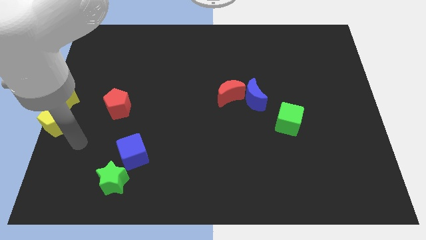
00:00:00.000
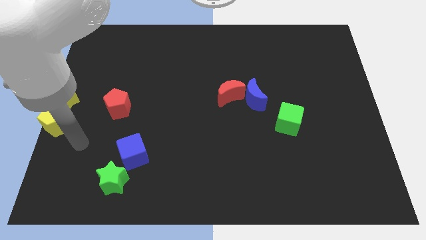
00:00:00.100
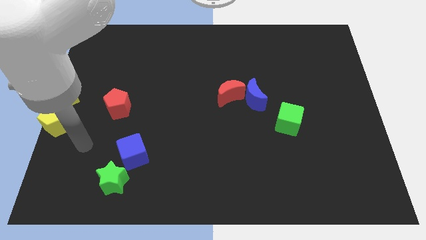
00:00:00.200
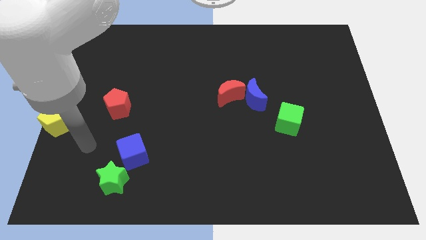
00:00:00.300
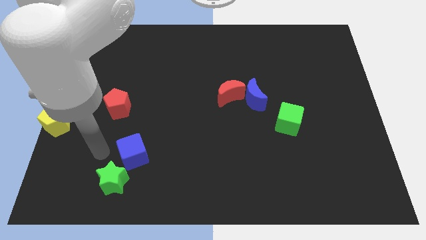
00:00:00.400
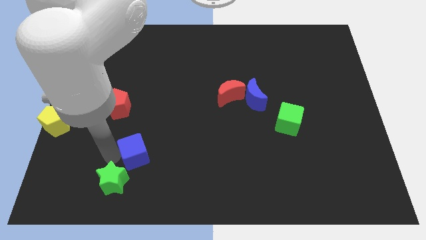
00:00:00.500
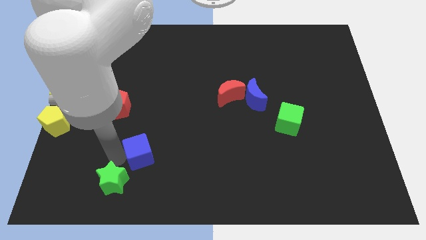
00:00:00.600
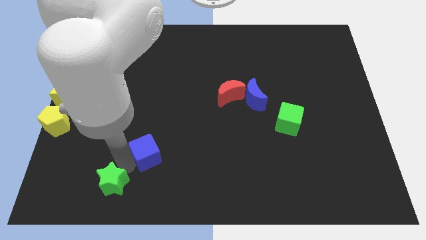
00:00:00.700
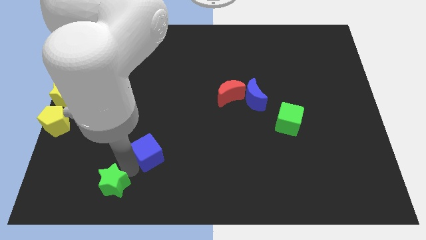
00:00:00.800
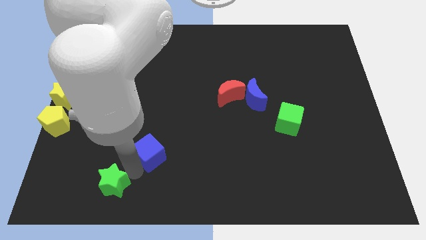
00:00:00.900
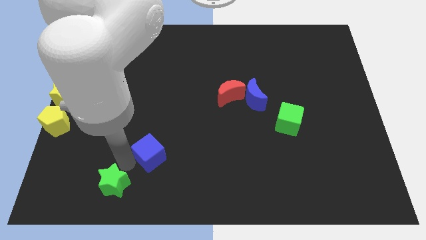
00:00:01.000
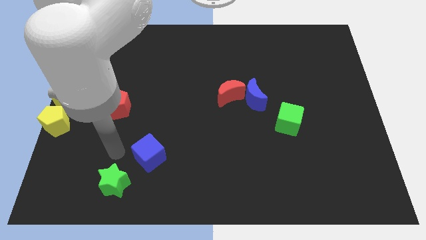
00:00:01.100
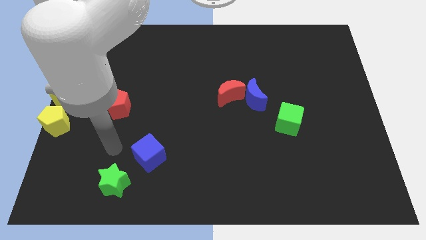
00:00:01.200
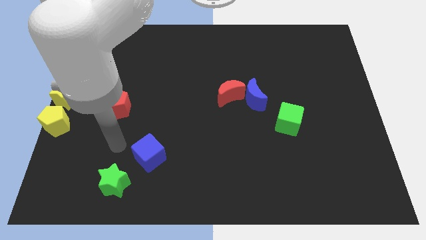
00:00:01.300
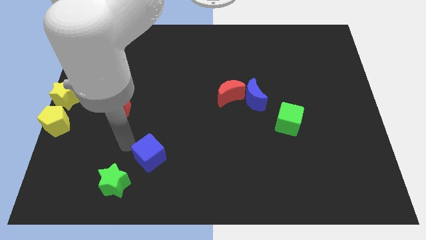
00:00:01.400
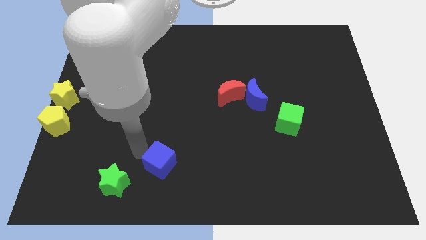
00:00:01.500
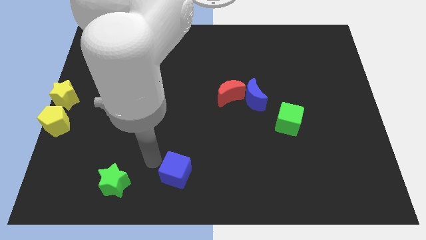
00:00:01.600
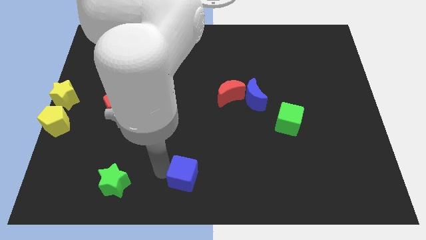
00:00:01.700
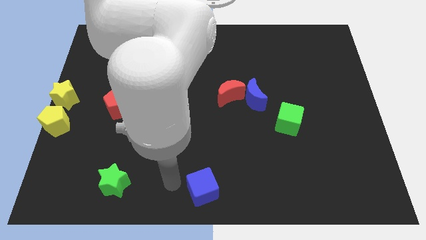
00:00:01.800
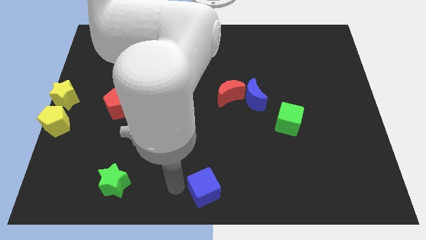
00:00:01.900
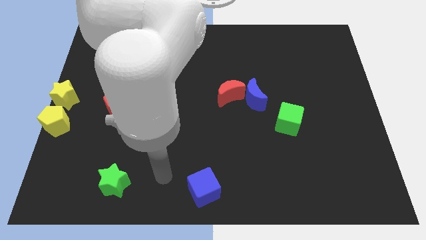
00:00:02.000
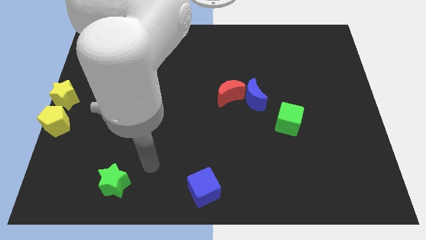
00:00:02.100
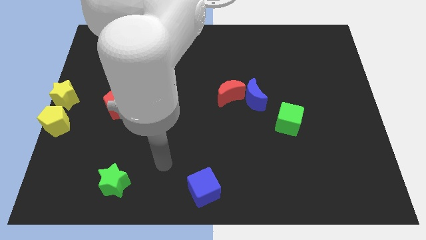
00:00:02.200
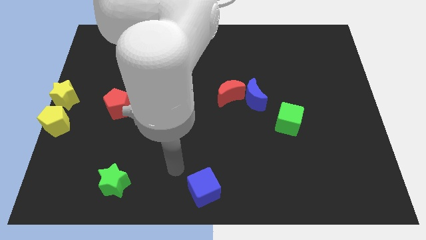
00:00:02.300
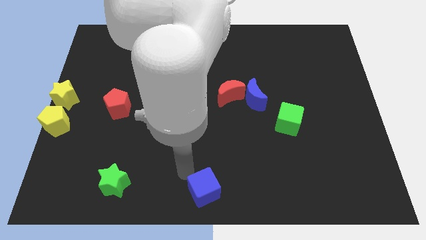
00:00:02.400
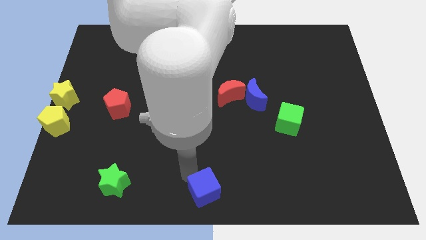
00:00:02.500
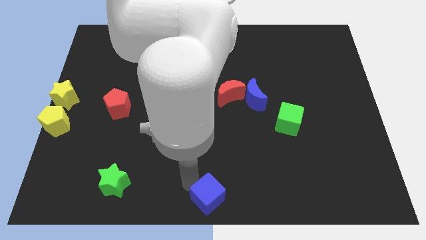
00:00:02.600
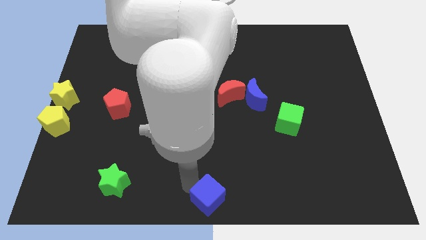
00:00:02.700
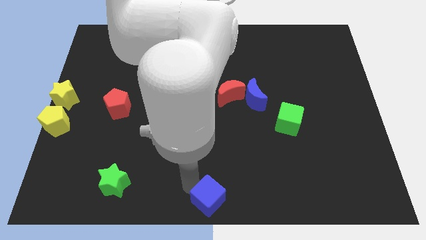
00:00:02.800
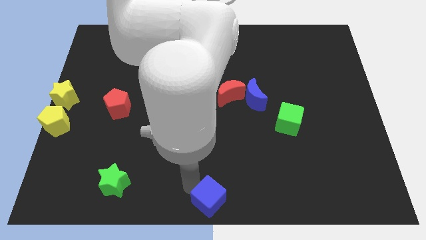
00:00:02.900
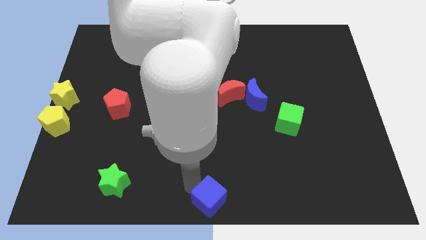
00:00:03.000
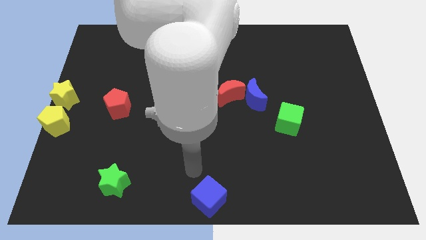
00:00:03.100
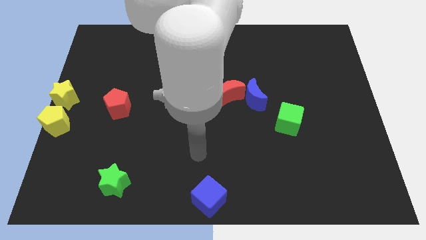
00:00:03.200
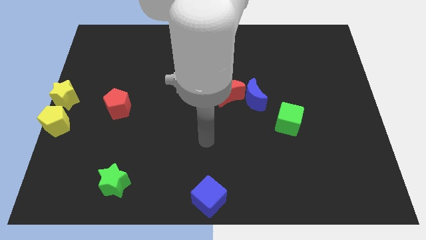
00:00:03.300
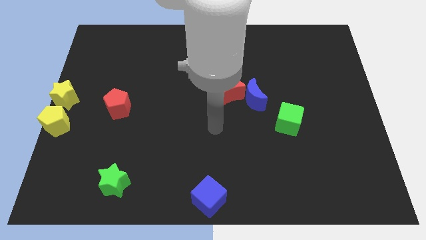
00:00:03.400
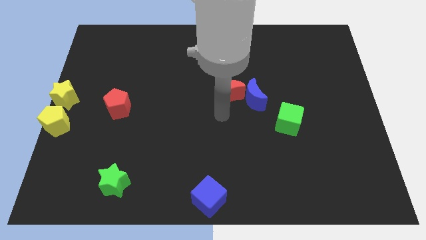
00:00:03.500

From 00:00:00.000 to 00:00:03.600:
separate blue cube and green star

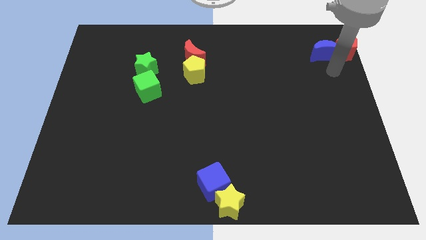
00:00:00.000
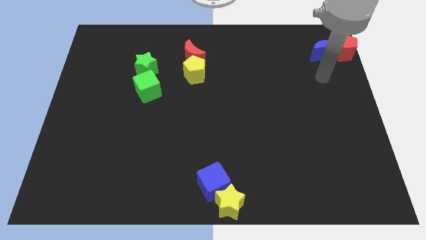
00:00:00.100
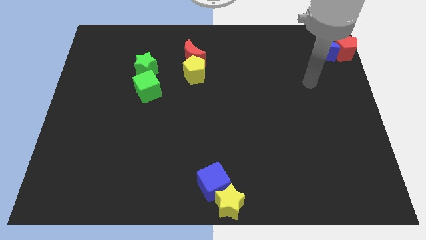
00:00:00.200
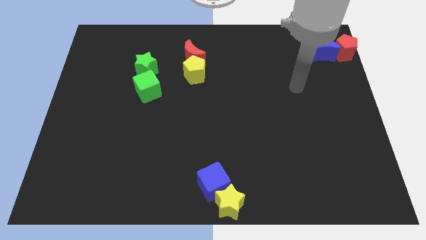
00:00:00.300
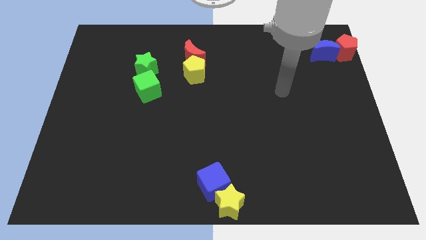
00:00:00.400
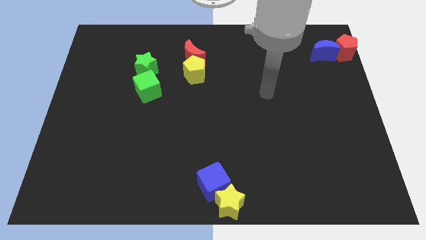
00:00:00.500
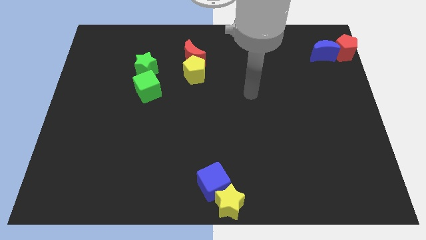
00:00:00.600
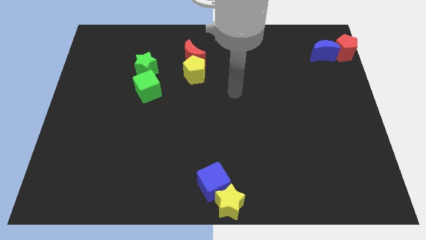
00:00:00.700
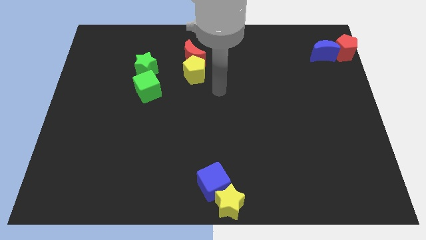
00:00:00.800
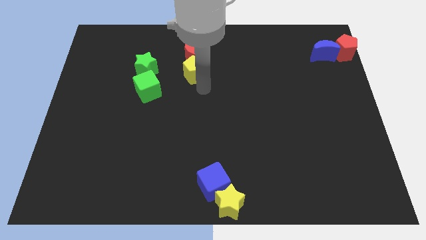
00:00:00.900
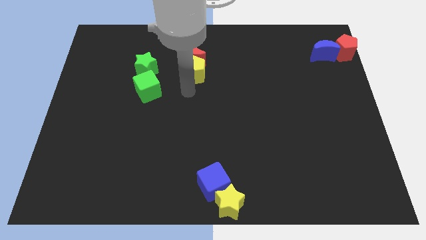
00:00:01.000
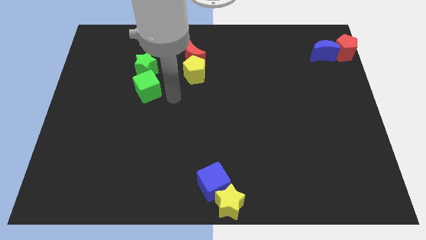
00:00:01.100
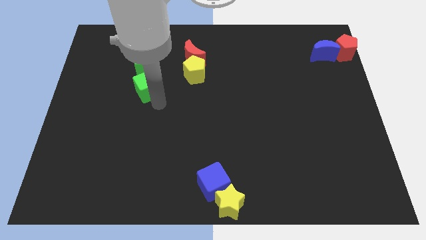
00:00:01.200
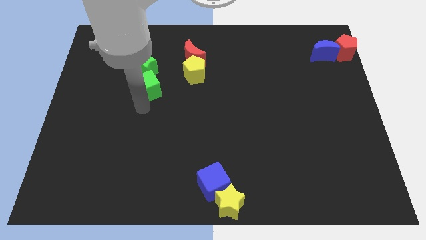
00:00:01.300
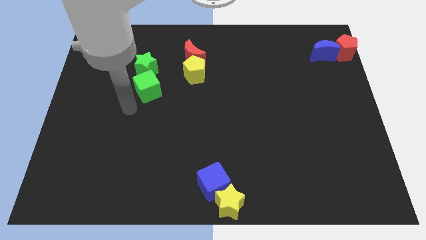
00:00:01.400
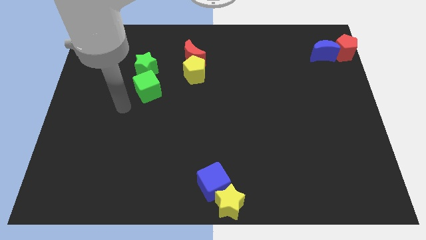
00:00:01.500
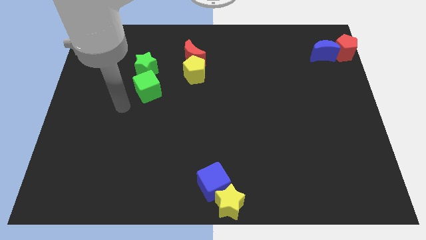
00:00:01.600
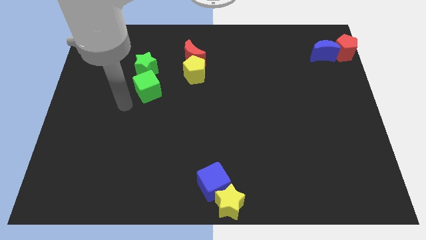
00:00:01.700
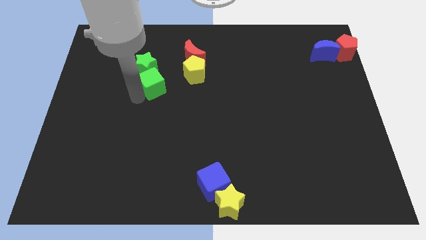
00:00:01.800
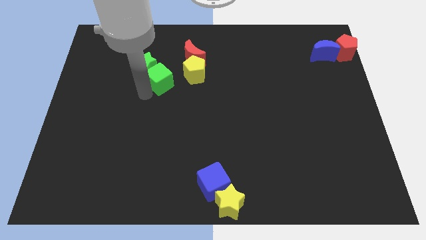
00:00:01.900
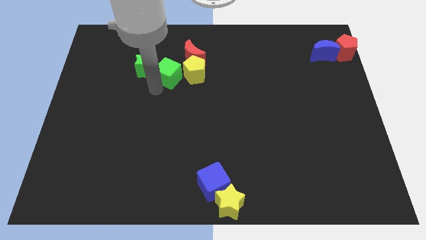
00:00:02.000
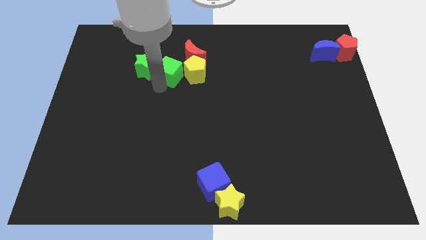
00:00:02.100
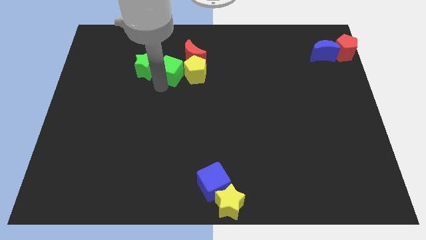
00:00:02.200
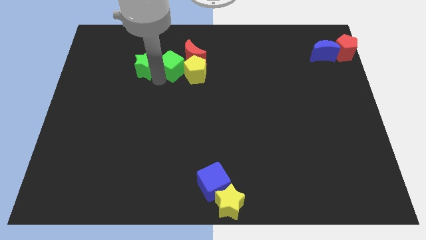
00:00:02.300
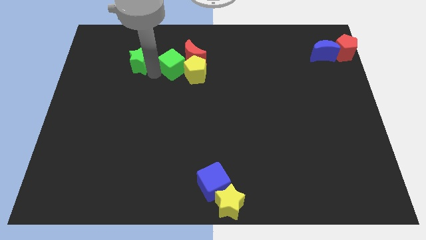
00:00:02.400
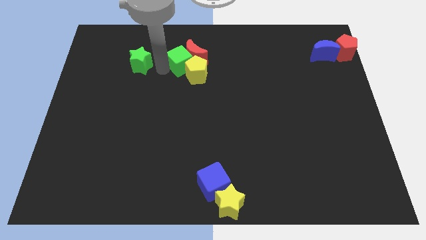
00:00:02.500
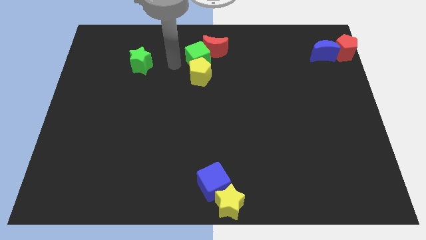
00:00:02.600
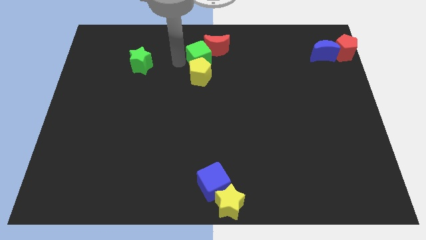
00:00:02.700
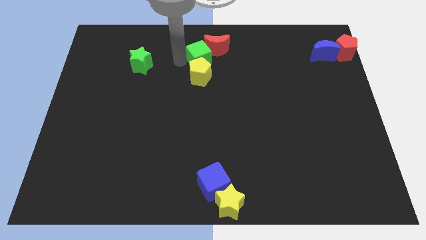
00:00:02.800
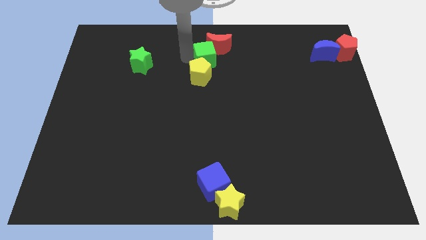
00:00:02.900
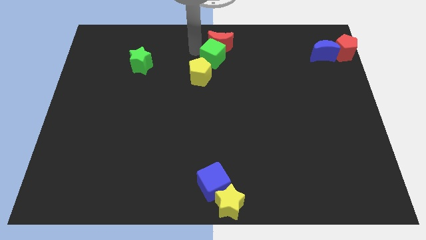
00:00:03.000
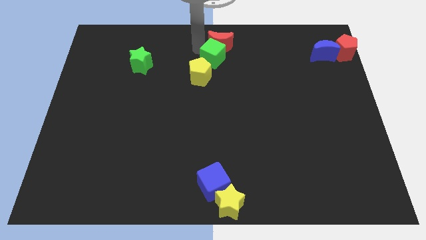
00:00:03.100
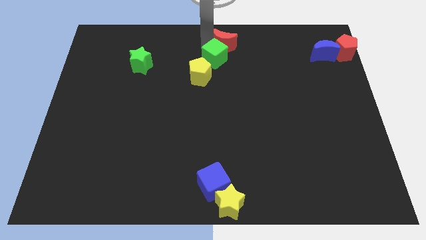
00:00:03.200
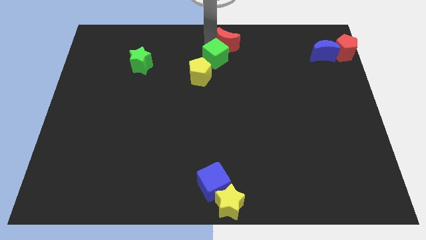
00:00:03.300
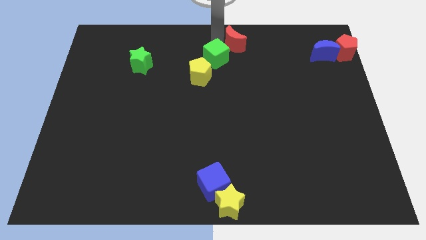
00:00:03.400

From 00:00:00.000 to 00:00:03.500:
separate green cube from the green star

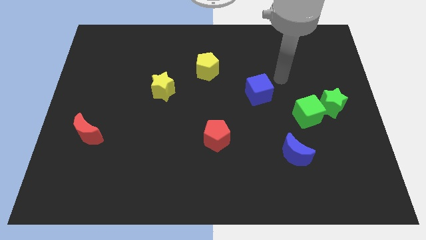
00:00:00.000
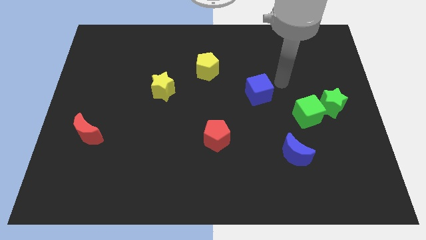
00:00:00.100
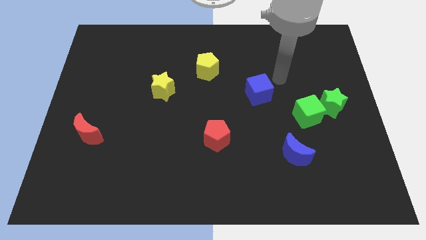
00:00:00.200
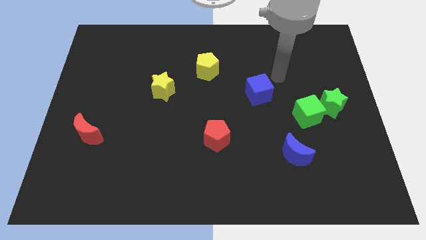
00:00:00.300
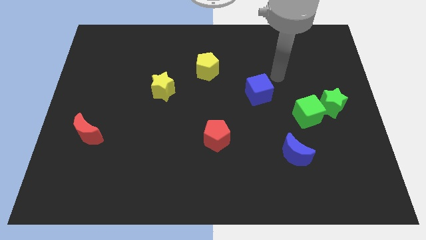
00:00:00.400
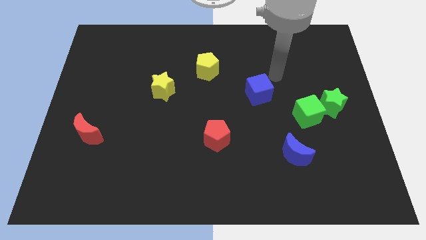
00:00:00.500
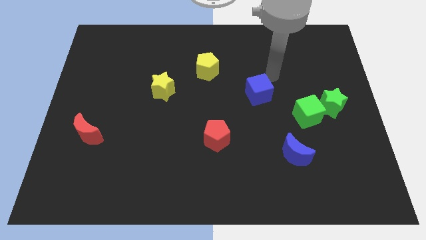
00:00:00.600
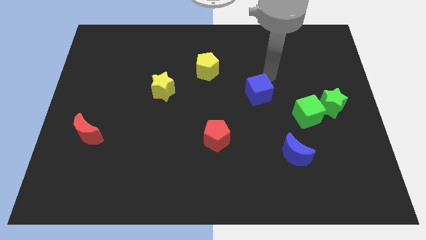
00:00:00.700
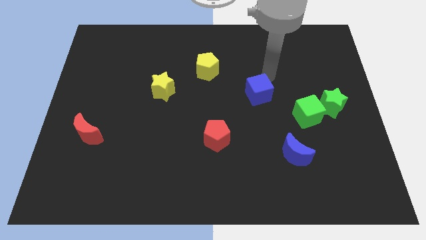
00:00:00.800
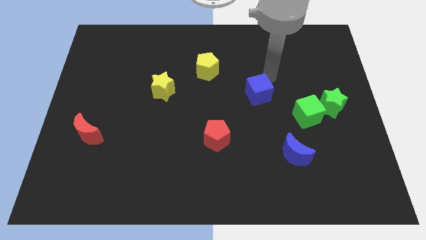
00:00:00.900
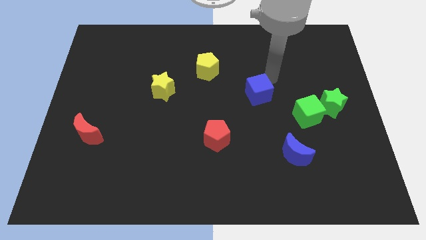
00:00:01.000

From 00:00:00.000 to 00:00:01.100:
place arm above blue cube

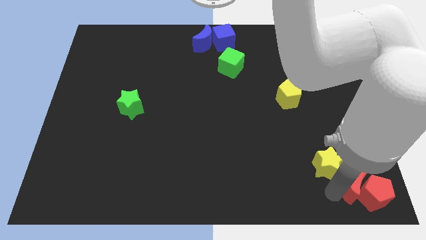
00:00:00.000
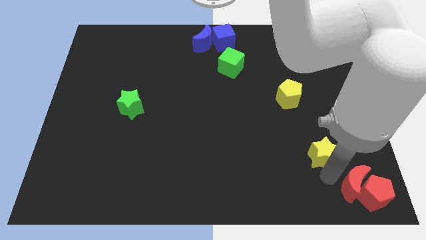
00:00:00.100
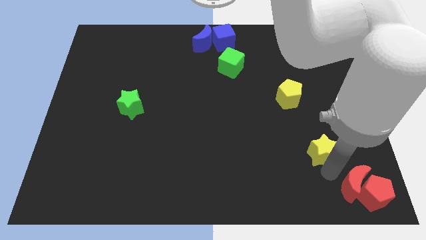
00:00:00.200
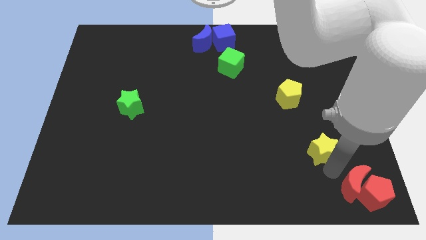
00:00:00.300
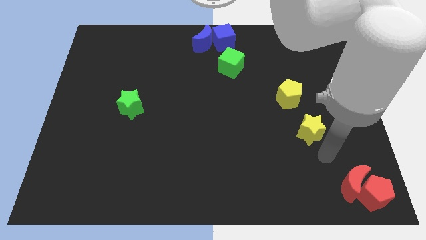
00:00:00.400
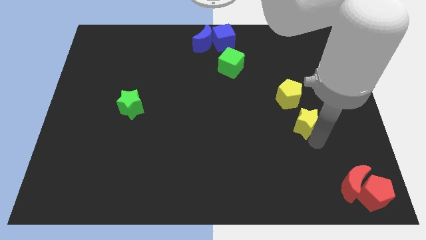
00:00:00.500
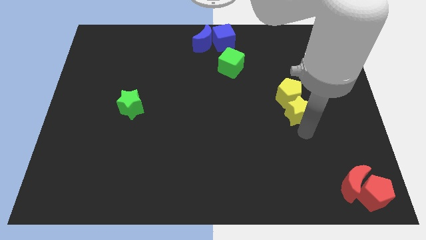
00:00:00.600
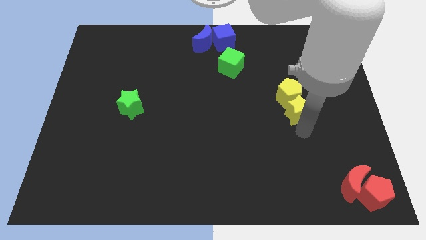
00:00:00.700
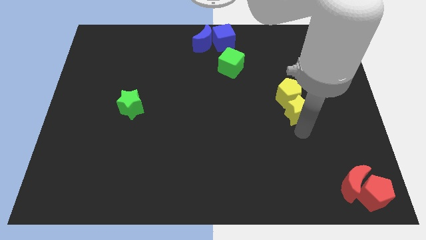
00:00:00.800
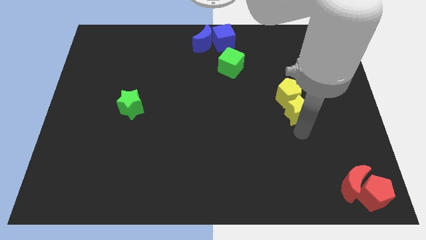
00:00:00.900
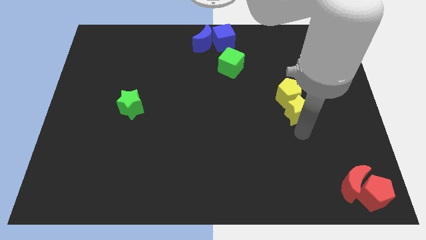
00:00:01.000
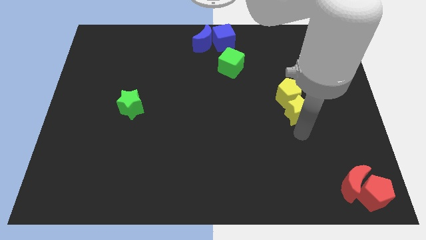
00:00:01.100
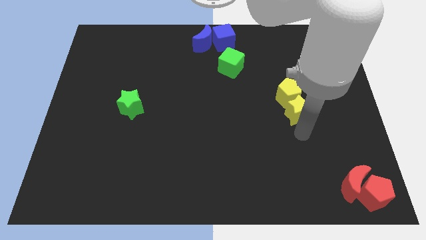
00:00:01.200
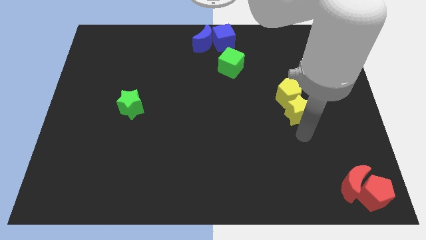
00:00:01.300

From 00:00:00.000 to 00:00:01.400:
drag the yellow star slightly upwards
